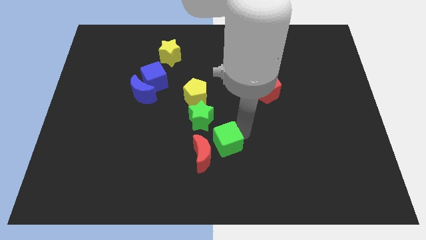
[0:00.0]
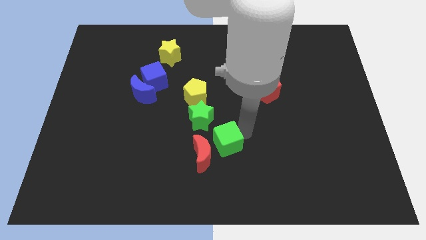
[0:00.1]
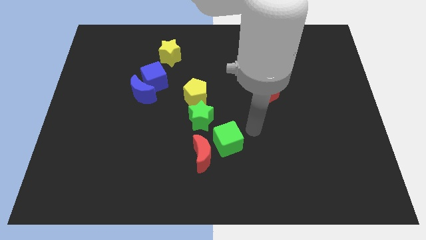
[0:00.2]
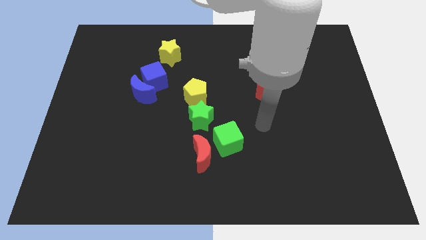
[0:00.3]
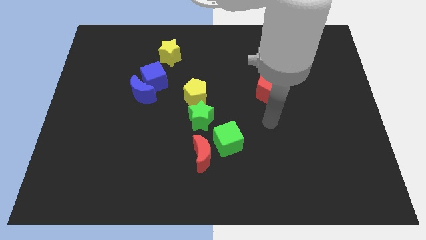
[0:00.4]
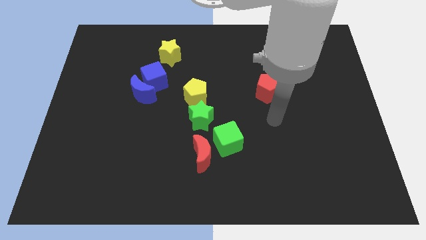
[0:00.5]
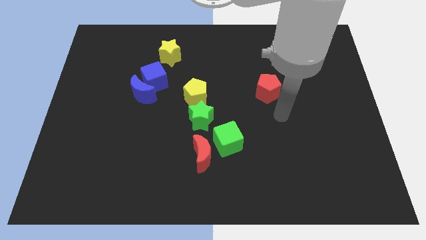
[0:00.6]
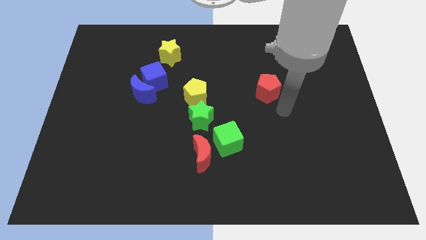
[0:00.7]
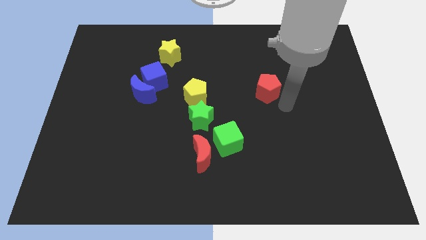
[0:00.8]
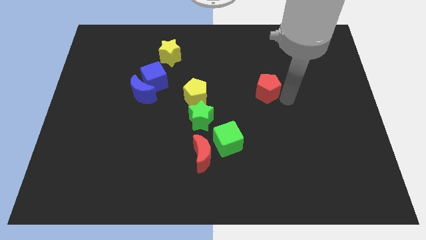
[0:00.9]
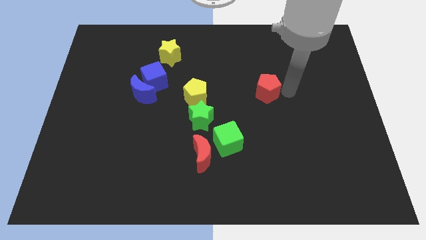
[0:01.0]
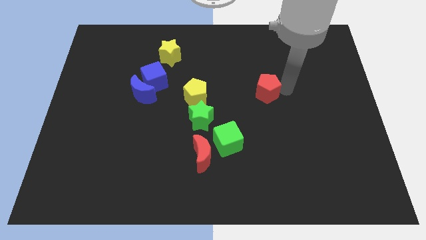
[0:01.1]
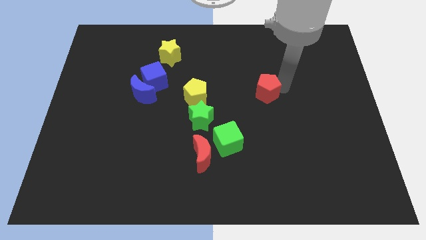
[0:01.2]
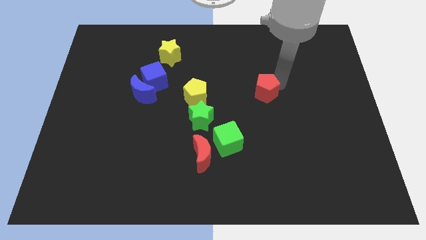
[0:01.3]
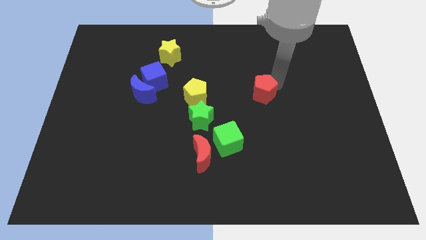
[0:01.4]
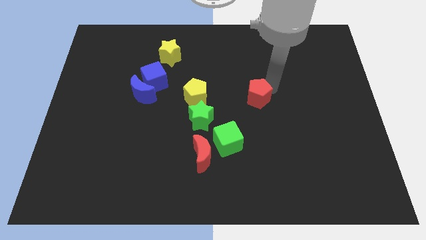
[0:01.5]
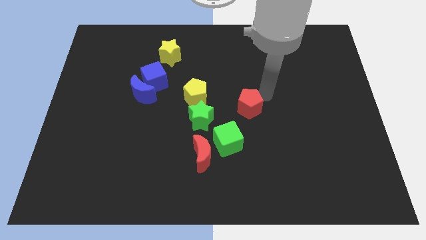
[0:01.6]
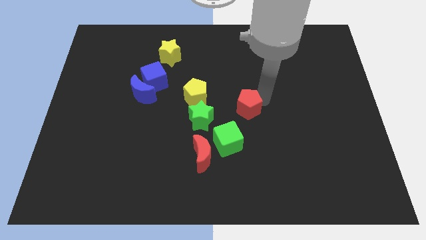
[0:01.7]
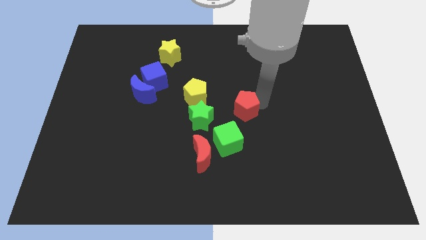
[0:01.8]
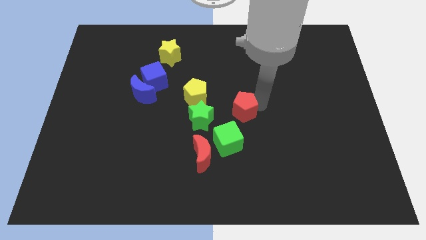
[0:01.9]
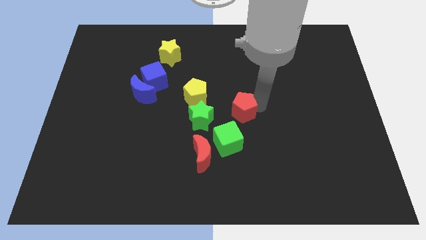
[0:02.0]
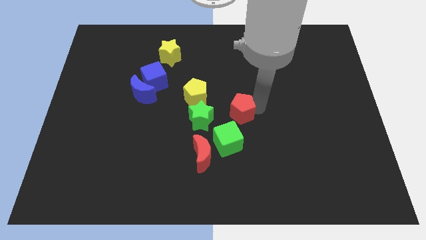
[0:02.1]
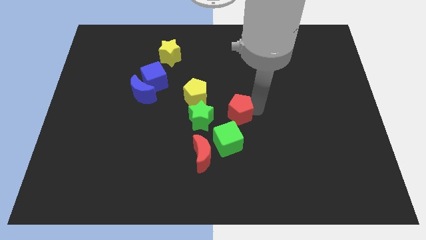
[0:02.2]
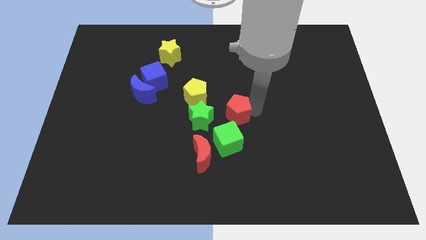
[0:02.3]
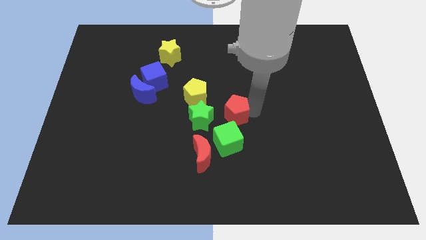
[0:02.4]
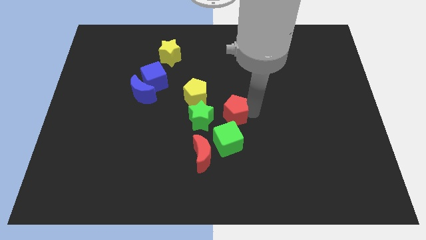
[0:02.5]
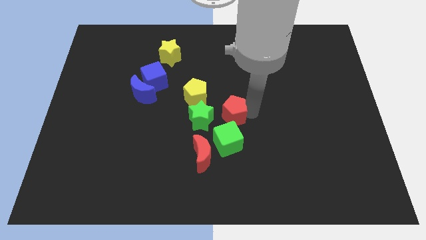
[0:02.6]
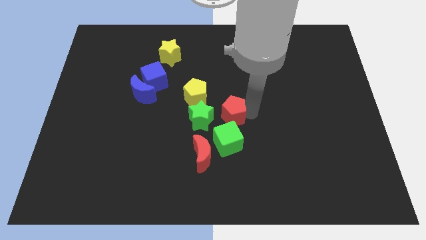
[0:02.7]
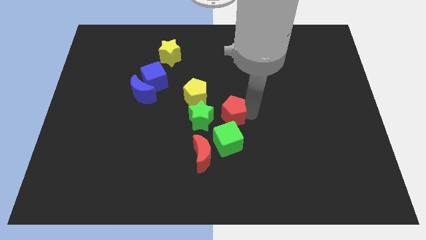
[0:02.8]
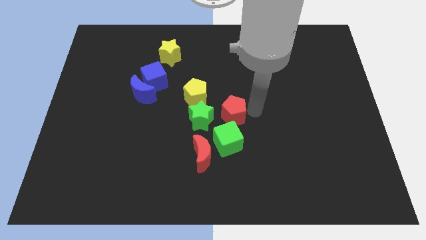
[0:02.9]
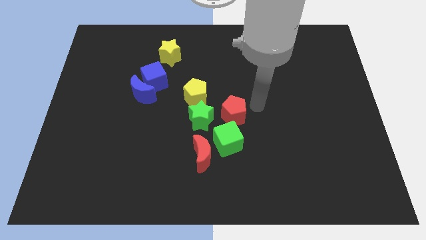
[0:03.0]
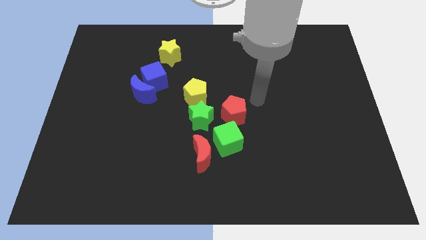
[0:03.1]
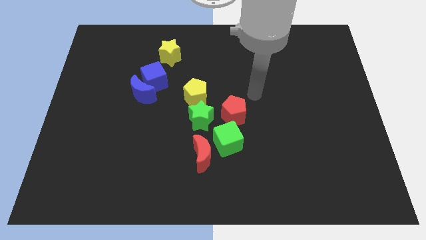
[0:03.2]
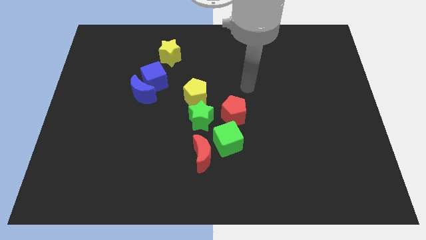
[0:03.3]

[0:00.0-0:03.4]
move the red pentagon to the right of the green star

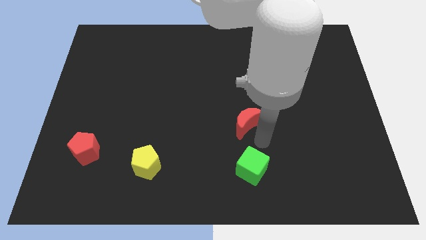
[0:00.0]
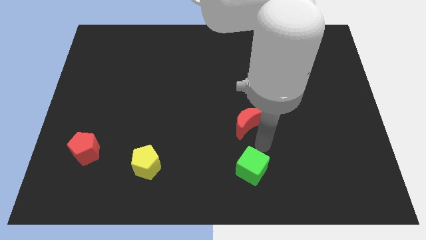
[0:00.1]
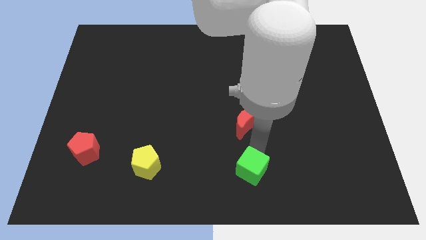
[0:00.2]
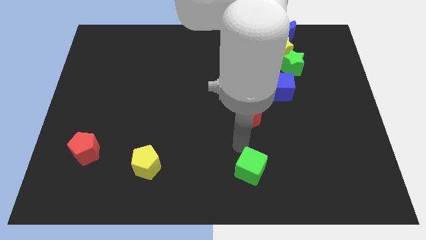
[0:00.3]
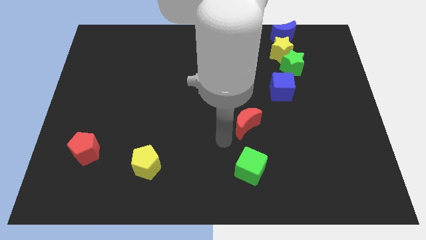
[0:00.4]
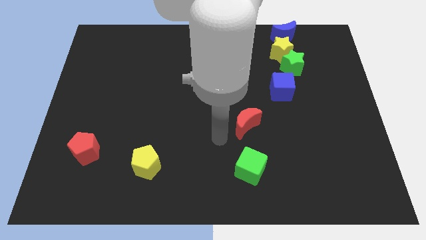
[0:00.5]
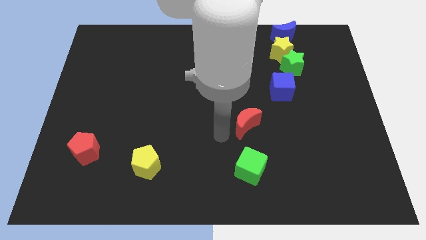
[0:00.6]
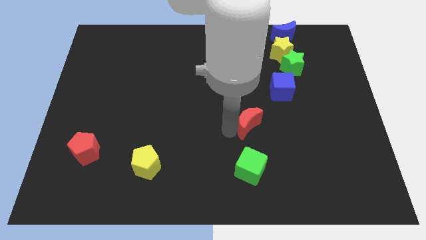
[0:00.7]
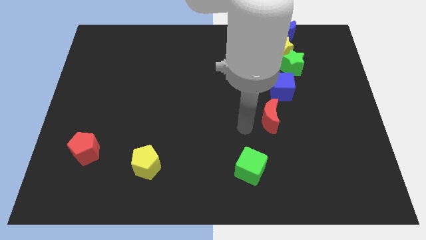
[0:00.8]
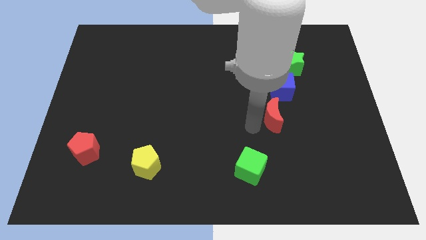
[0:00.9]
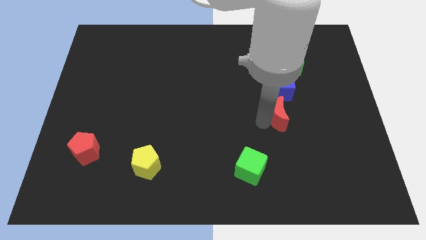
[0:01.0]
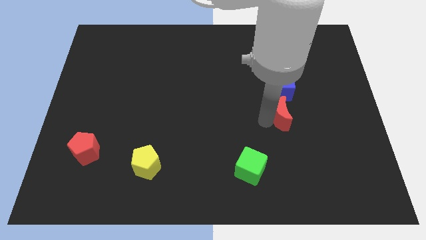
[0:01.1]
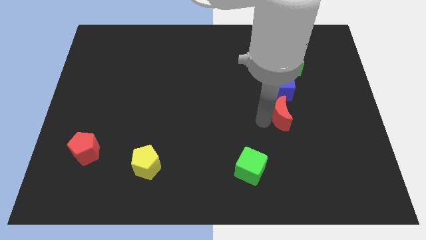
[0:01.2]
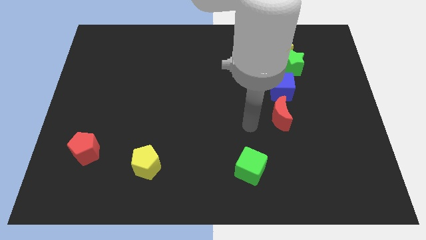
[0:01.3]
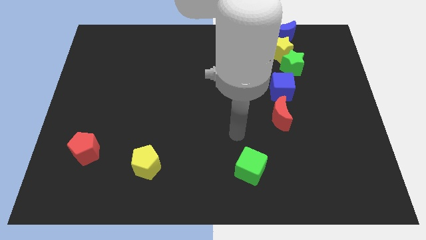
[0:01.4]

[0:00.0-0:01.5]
place the red moon at the bottom side of the blue cube

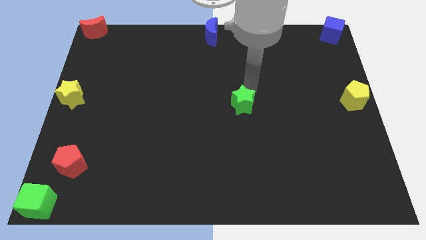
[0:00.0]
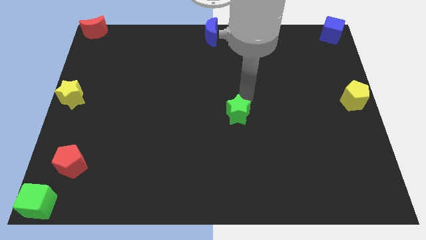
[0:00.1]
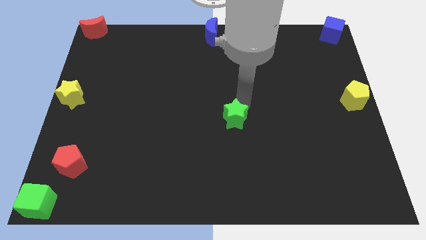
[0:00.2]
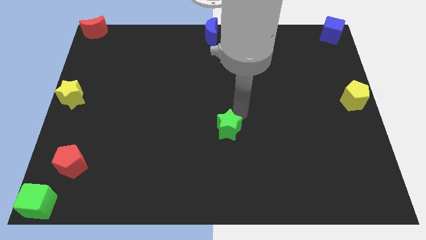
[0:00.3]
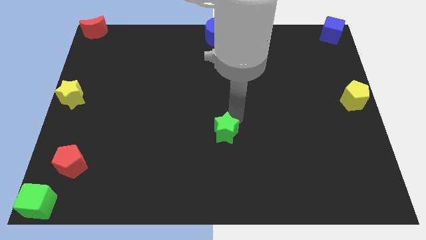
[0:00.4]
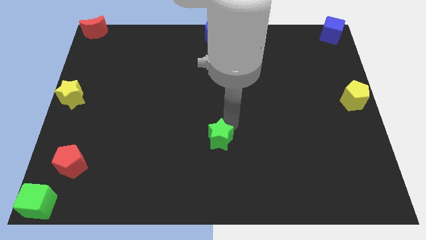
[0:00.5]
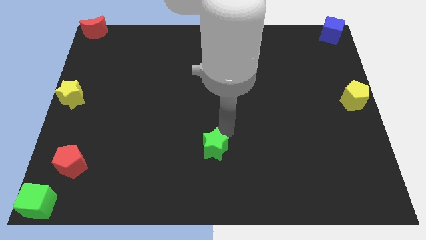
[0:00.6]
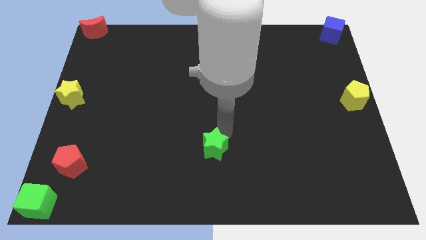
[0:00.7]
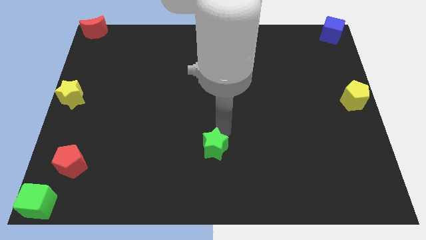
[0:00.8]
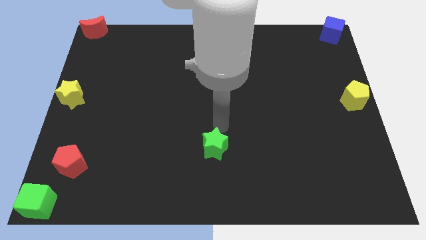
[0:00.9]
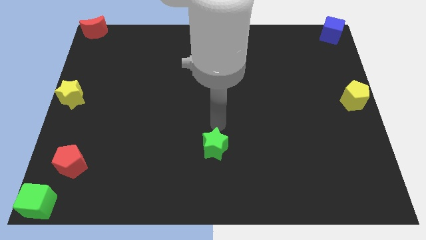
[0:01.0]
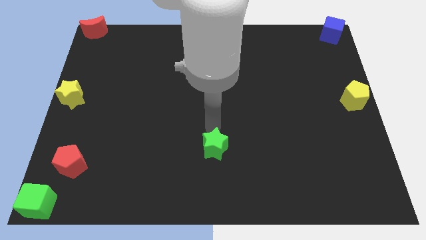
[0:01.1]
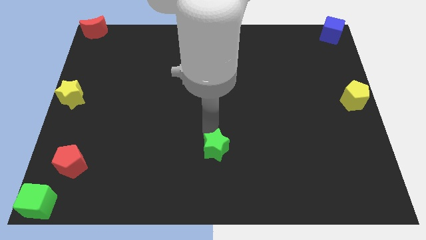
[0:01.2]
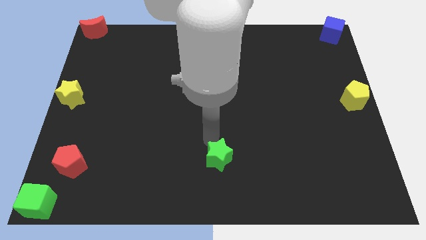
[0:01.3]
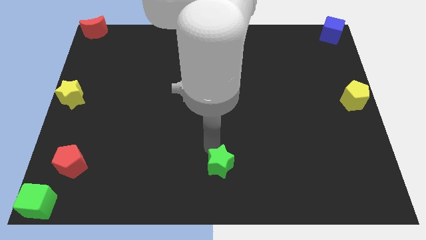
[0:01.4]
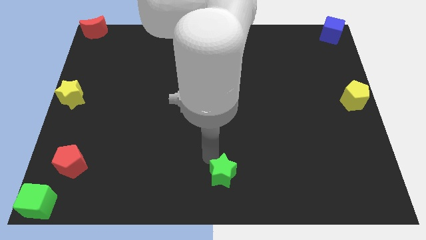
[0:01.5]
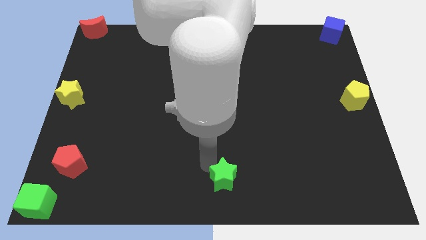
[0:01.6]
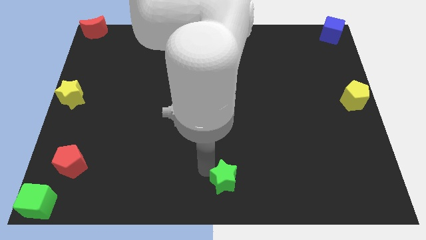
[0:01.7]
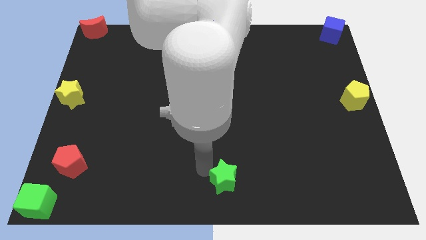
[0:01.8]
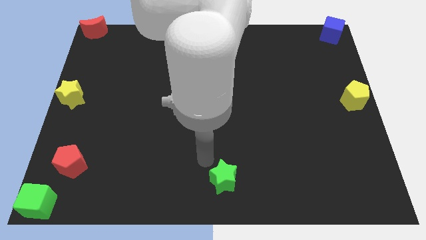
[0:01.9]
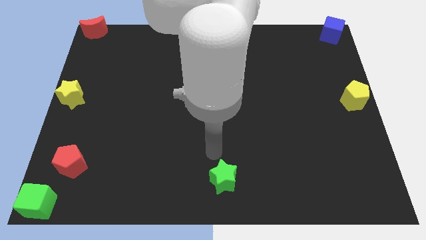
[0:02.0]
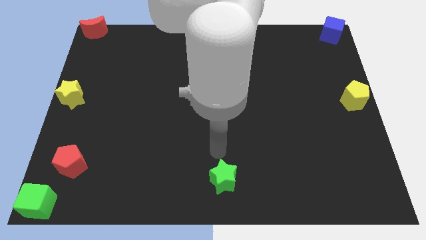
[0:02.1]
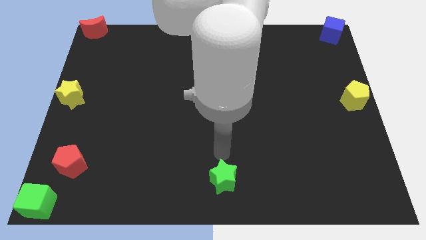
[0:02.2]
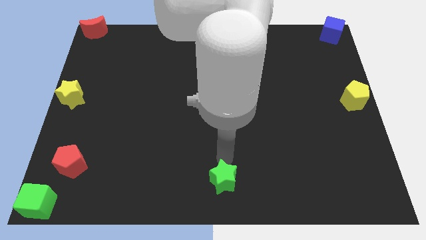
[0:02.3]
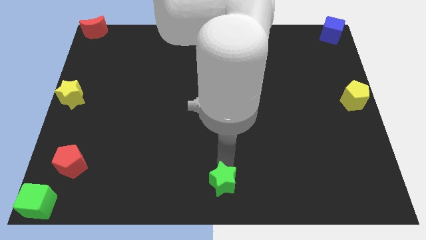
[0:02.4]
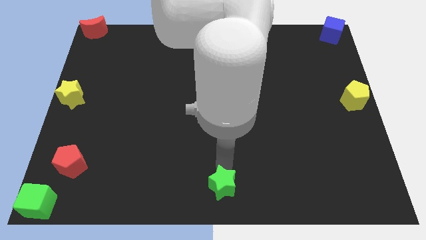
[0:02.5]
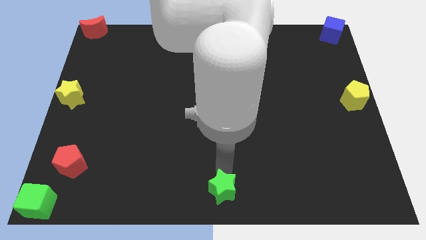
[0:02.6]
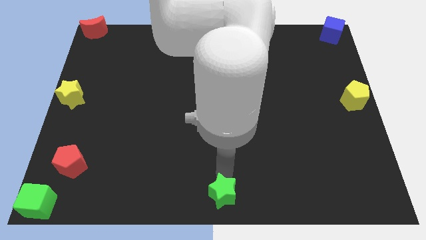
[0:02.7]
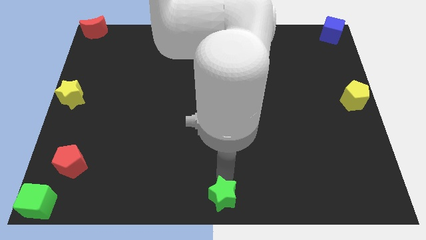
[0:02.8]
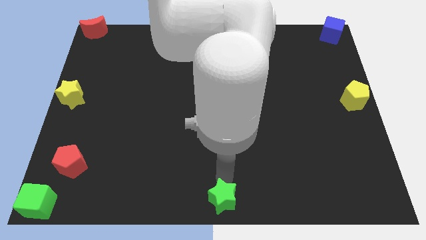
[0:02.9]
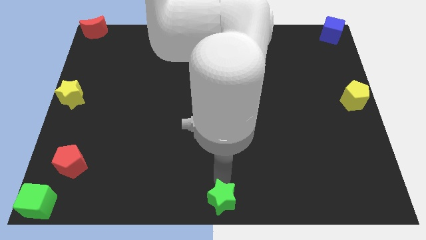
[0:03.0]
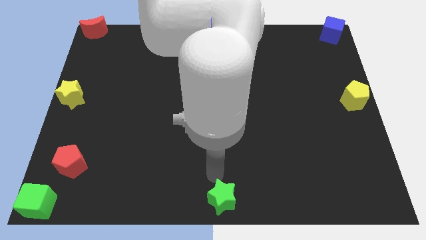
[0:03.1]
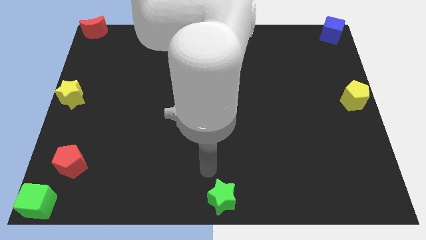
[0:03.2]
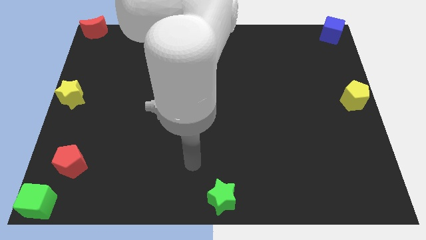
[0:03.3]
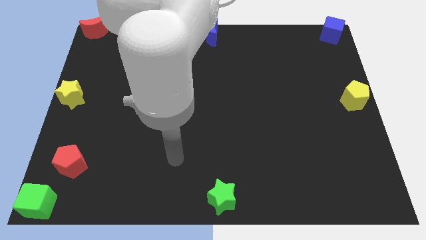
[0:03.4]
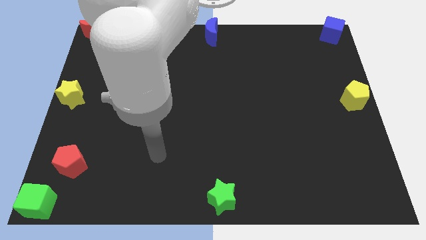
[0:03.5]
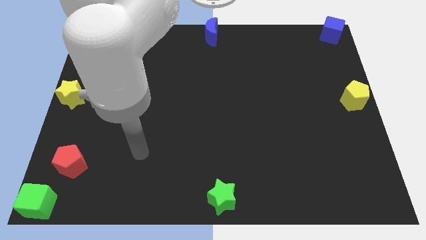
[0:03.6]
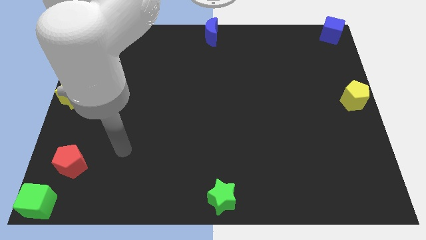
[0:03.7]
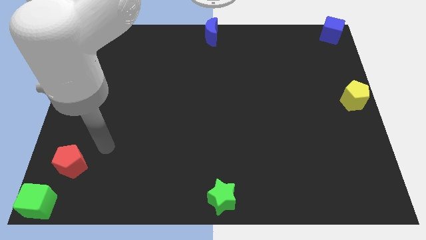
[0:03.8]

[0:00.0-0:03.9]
drag green star towards bottom middle of the board

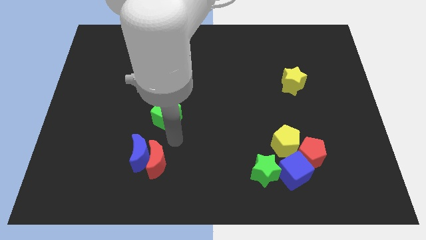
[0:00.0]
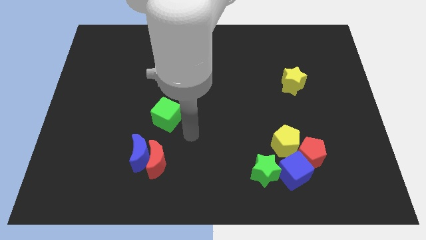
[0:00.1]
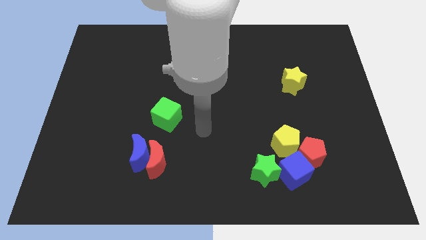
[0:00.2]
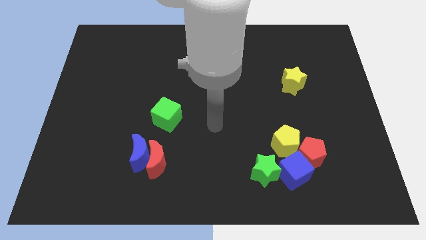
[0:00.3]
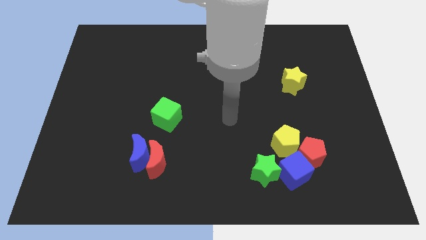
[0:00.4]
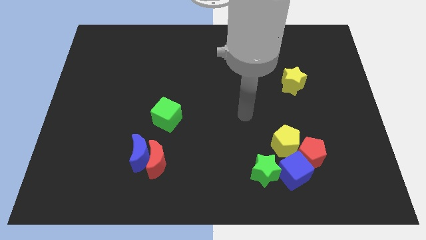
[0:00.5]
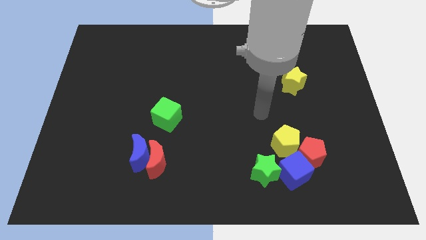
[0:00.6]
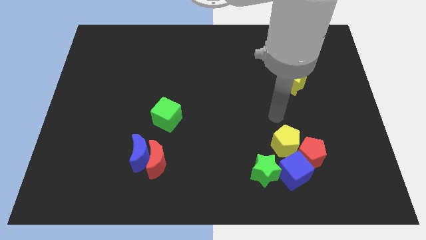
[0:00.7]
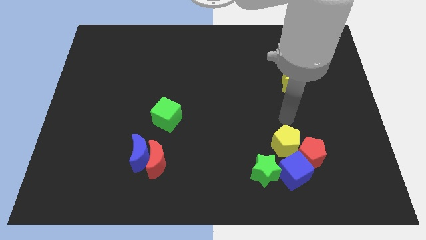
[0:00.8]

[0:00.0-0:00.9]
move the arm to the top of the yellow pentagon
